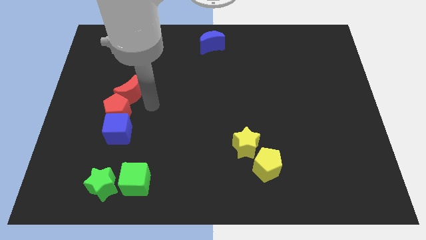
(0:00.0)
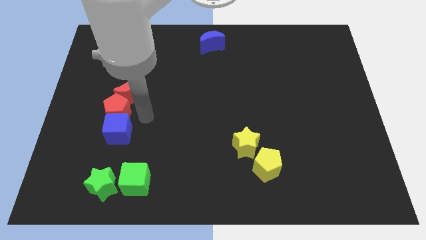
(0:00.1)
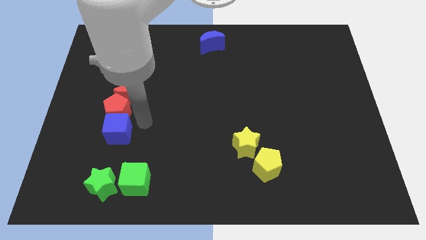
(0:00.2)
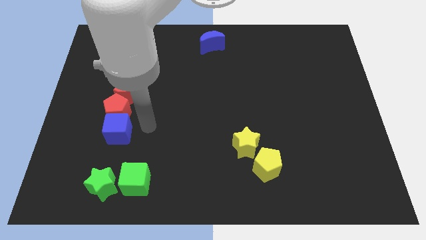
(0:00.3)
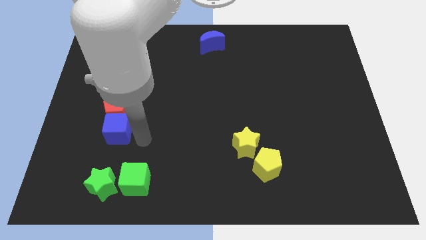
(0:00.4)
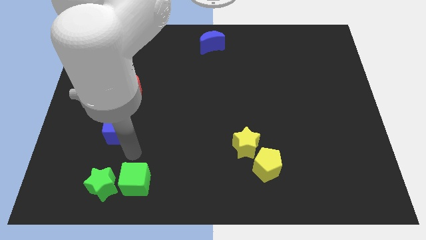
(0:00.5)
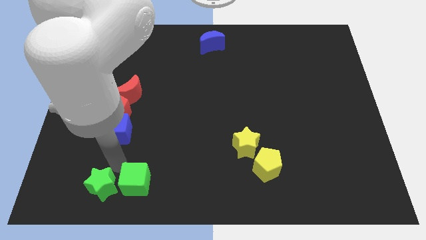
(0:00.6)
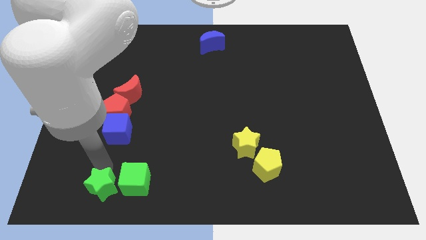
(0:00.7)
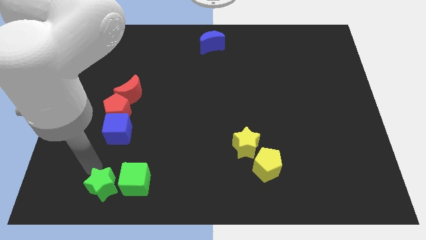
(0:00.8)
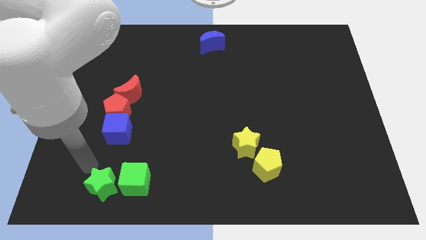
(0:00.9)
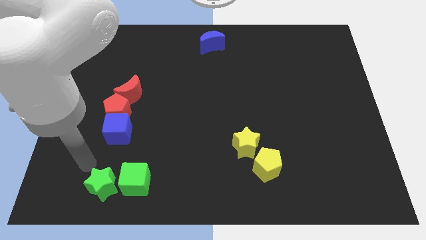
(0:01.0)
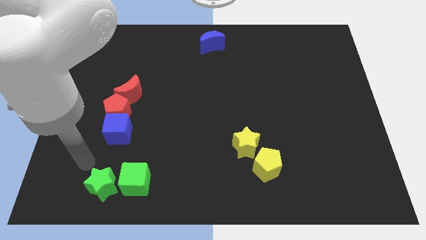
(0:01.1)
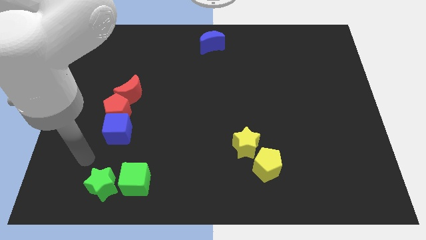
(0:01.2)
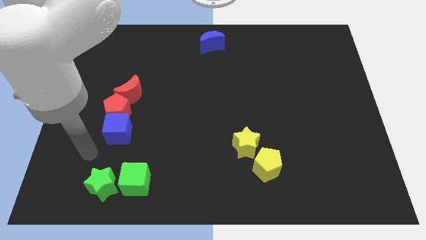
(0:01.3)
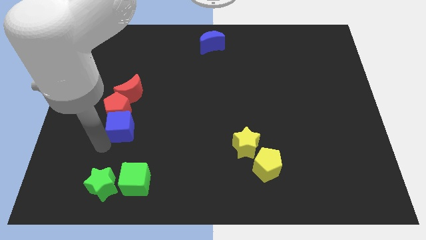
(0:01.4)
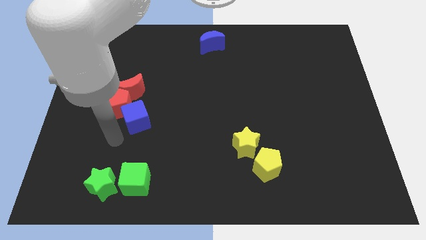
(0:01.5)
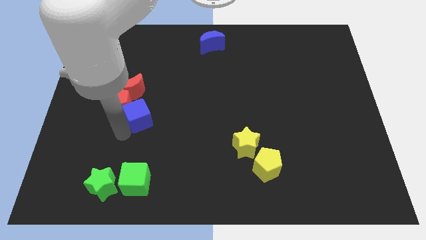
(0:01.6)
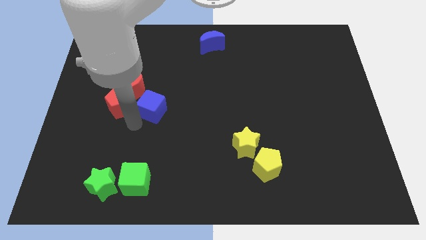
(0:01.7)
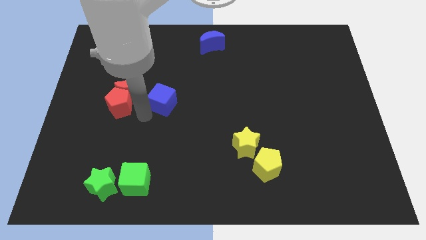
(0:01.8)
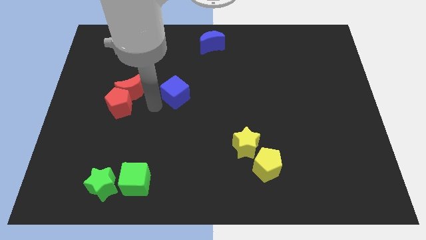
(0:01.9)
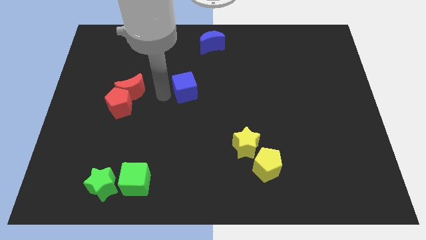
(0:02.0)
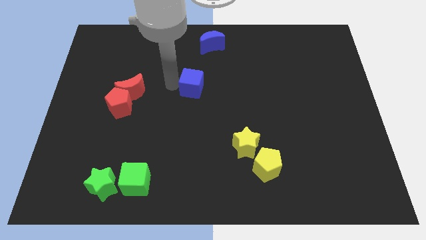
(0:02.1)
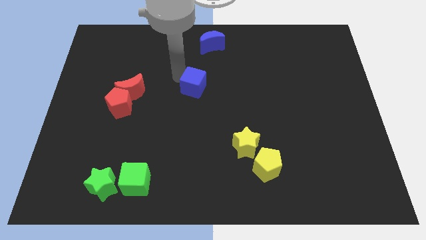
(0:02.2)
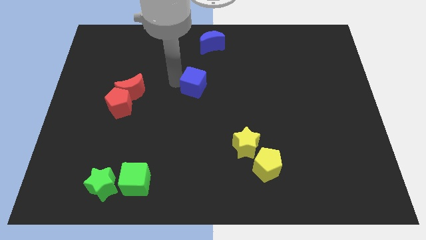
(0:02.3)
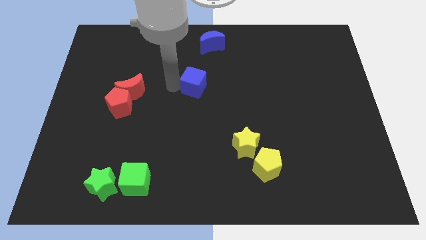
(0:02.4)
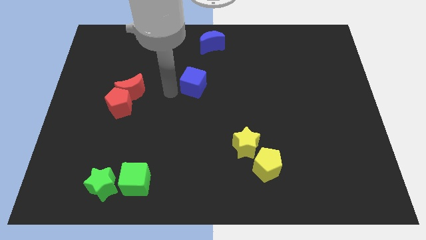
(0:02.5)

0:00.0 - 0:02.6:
move the blue cube away from the red pentagon

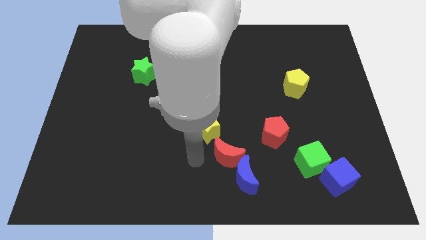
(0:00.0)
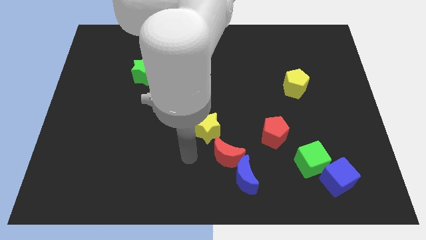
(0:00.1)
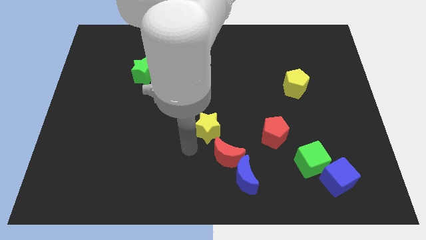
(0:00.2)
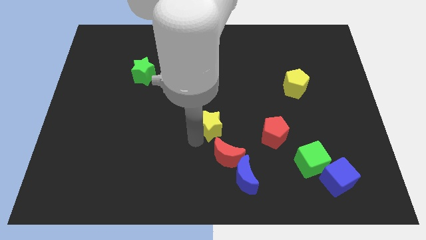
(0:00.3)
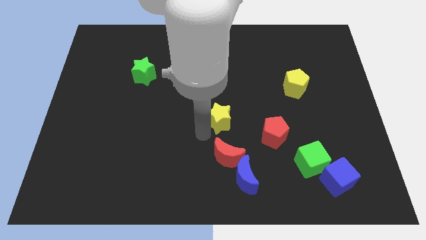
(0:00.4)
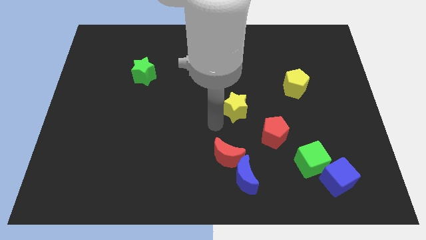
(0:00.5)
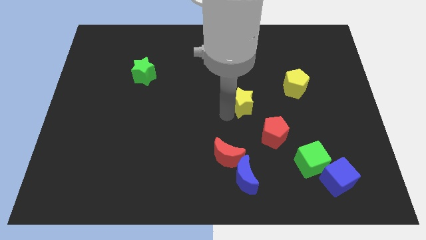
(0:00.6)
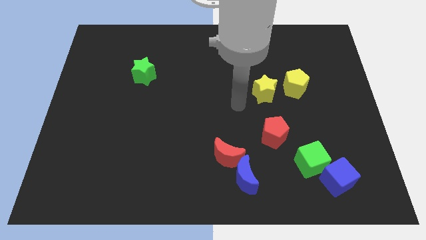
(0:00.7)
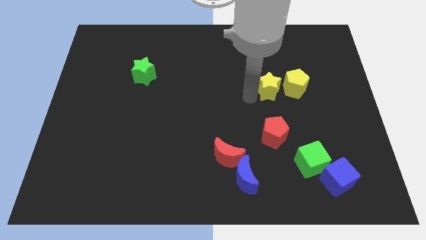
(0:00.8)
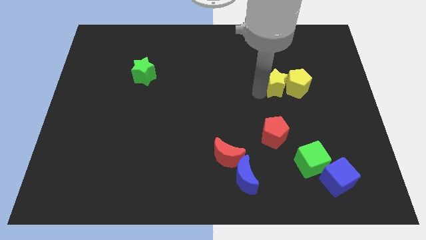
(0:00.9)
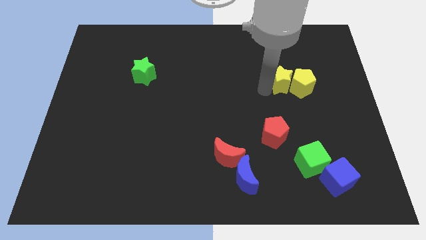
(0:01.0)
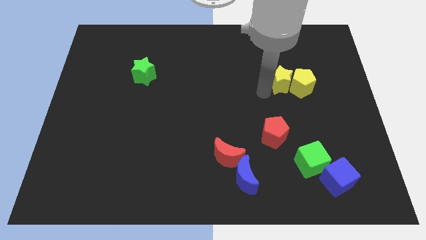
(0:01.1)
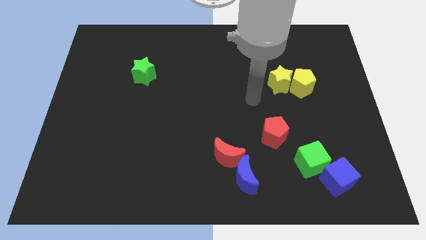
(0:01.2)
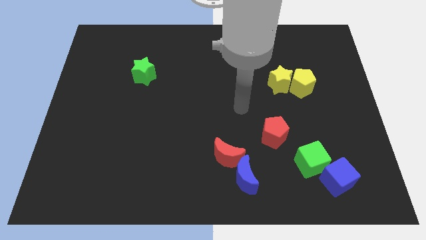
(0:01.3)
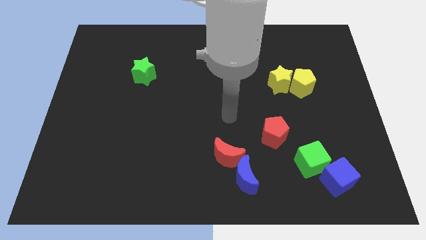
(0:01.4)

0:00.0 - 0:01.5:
push the yellow star left to the yellow pentagon

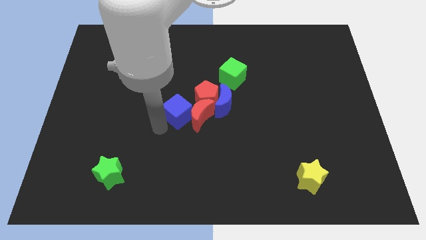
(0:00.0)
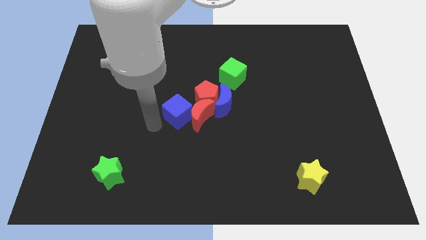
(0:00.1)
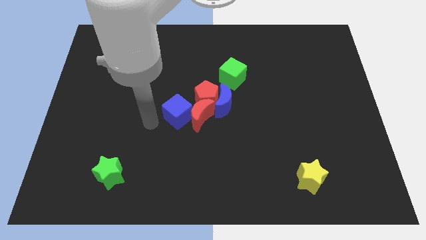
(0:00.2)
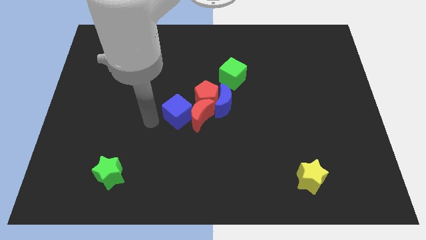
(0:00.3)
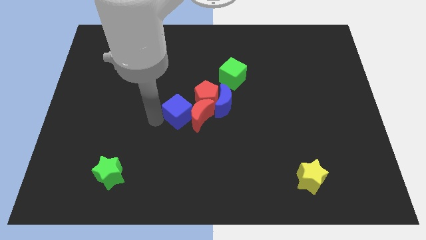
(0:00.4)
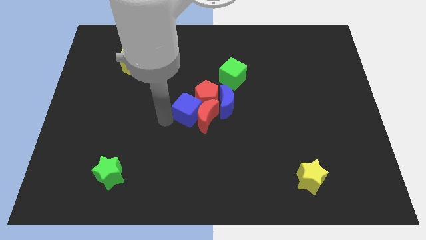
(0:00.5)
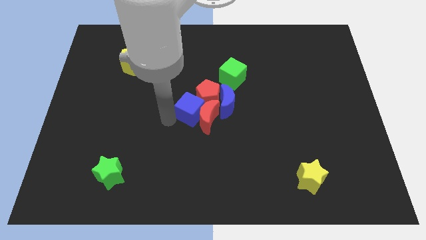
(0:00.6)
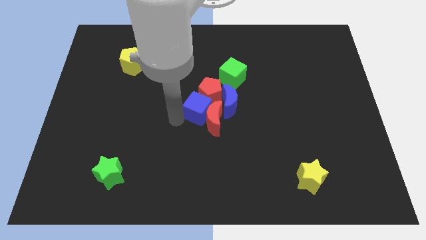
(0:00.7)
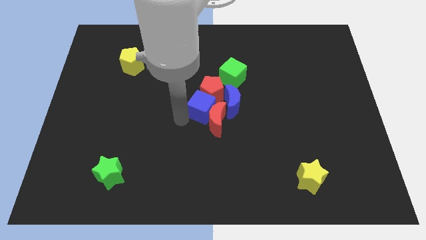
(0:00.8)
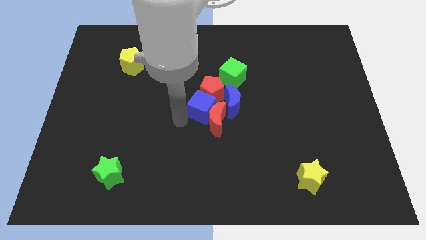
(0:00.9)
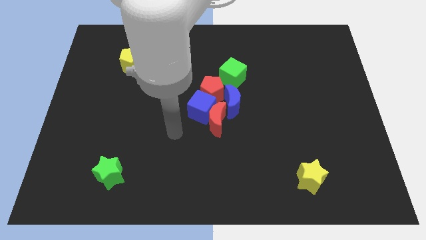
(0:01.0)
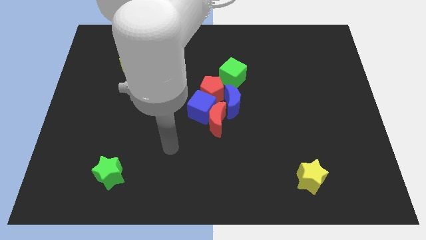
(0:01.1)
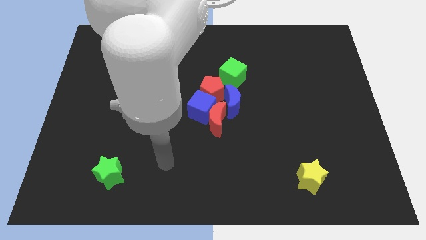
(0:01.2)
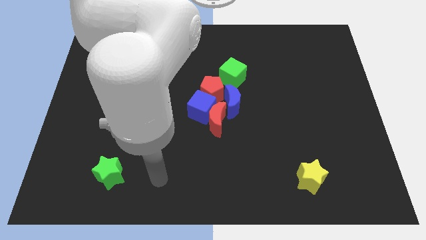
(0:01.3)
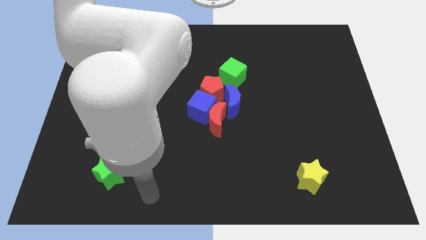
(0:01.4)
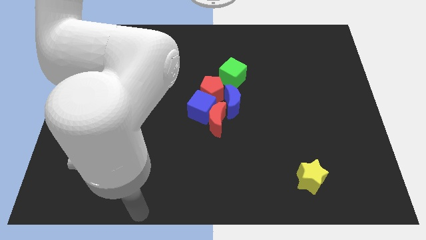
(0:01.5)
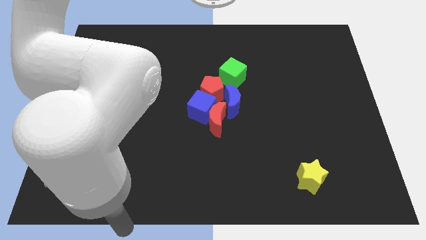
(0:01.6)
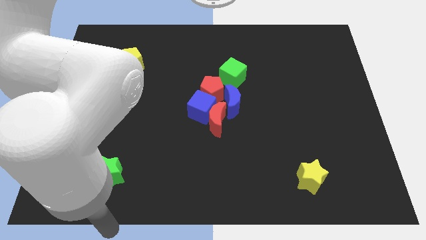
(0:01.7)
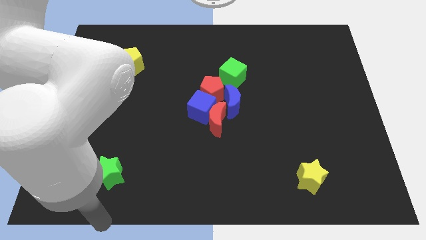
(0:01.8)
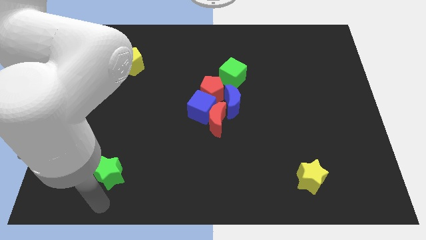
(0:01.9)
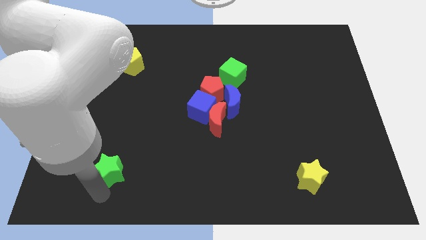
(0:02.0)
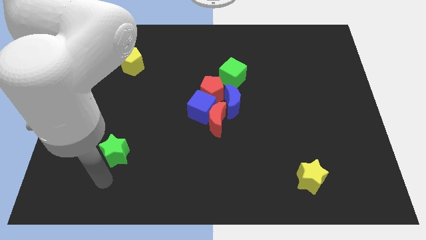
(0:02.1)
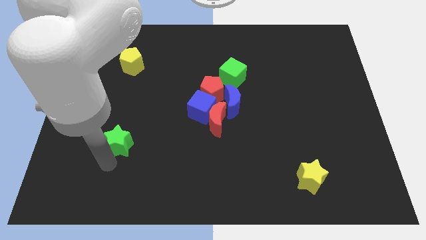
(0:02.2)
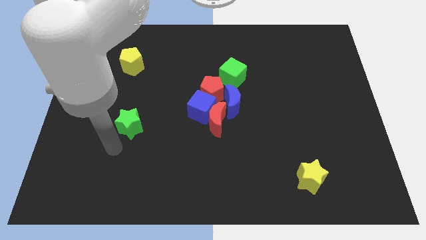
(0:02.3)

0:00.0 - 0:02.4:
move the arm away from the blue cube

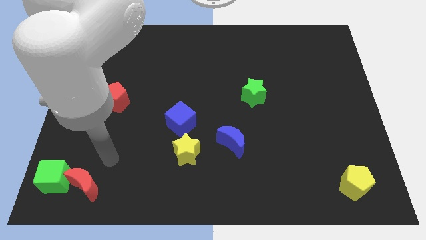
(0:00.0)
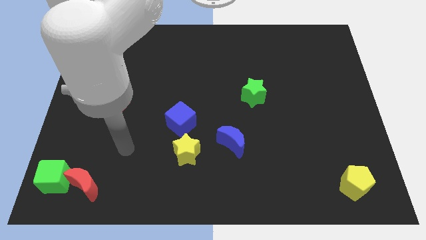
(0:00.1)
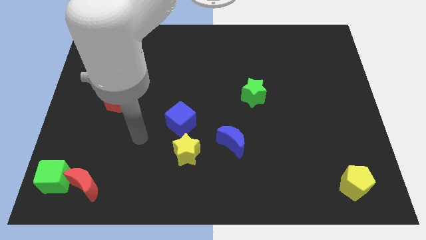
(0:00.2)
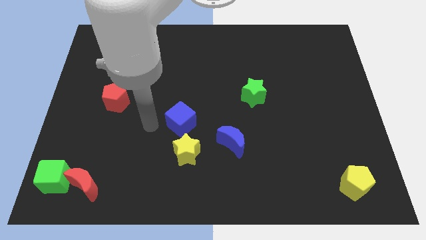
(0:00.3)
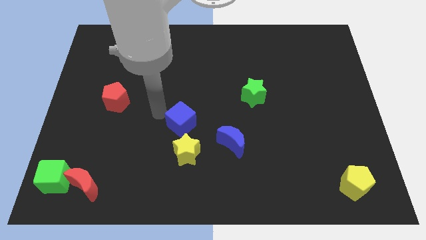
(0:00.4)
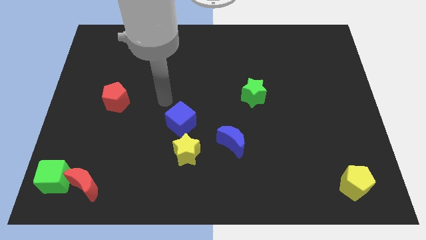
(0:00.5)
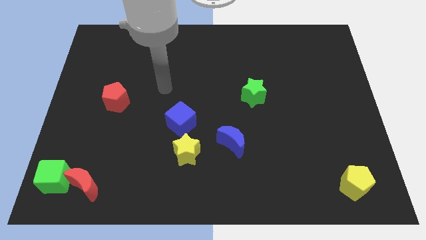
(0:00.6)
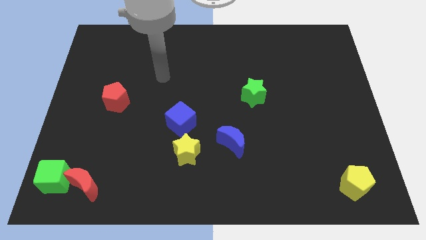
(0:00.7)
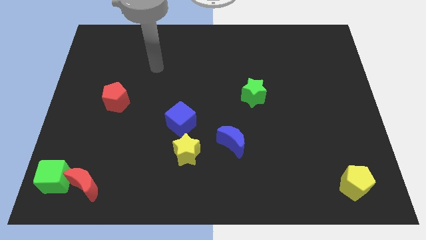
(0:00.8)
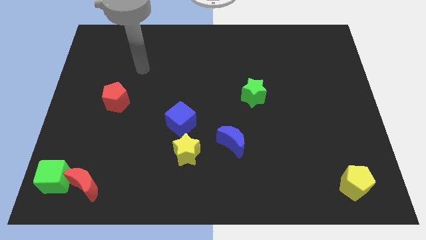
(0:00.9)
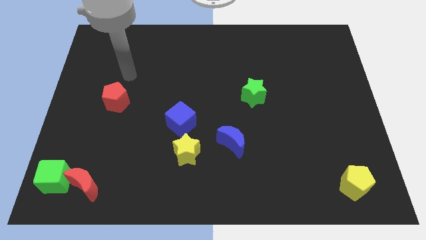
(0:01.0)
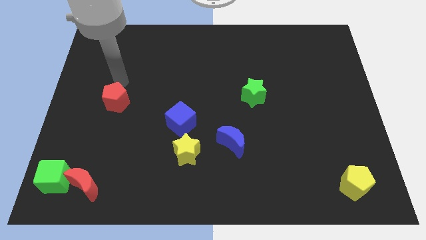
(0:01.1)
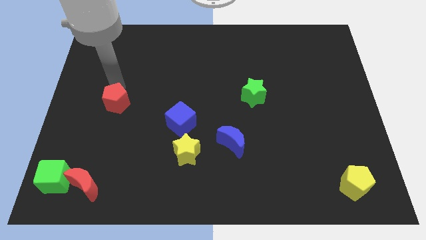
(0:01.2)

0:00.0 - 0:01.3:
place your arm to the top of red pentagon

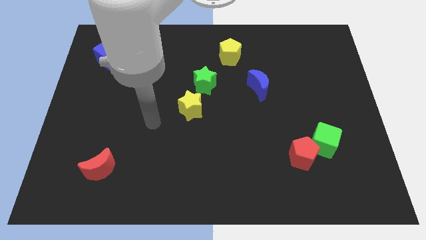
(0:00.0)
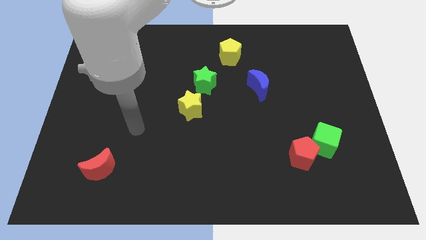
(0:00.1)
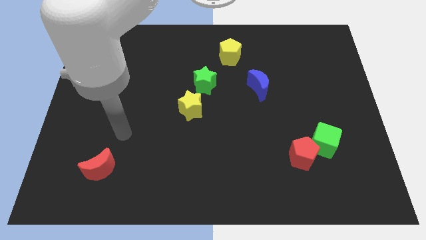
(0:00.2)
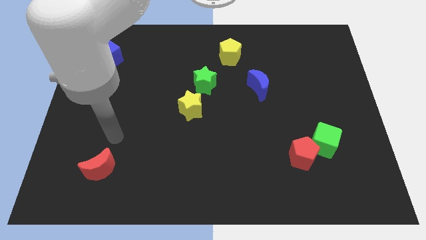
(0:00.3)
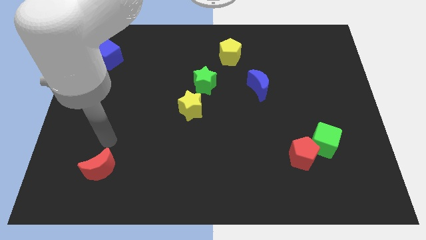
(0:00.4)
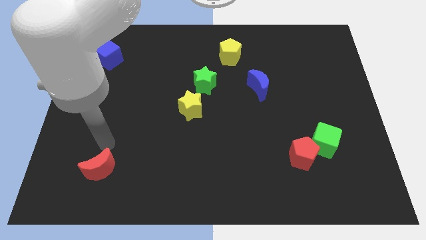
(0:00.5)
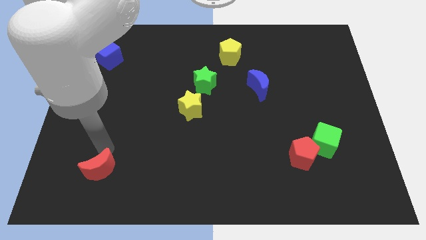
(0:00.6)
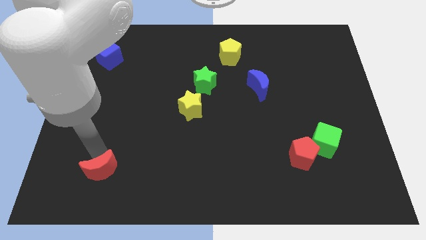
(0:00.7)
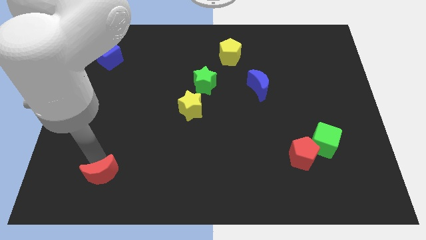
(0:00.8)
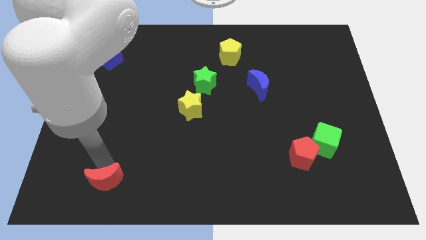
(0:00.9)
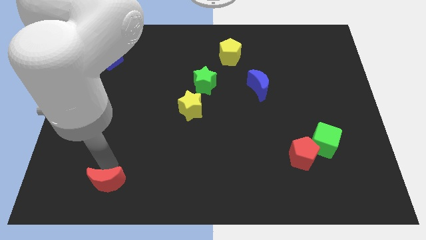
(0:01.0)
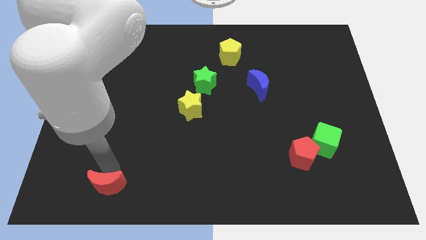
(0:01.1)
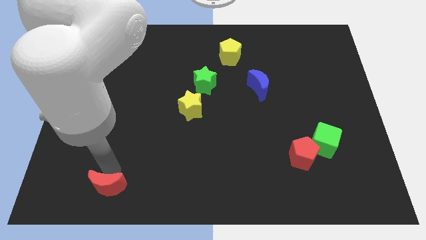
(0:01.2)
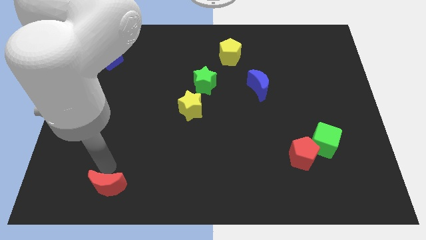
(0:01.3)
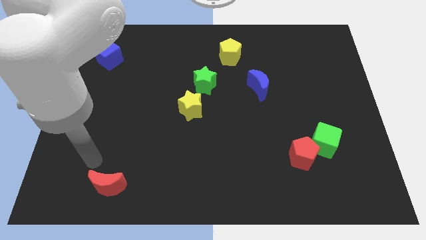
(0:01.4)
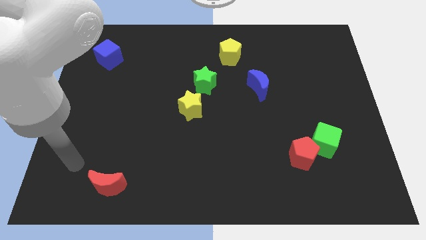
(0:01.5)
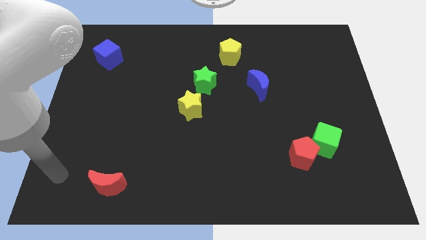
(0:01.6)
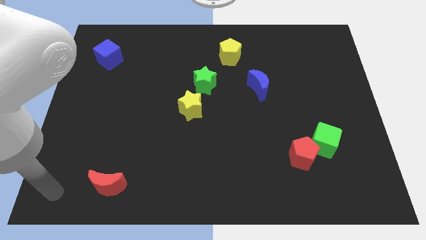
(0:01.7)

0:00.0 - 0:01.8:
move the red moon downwards
